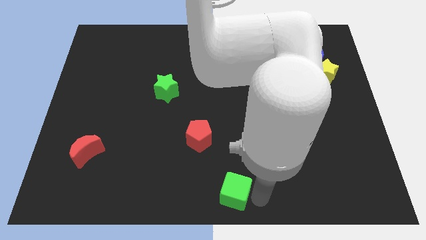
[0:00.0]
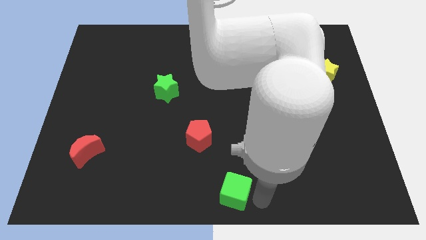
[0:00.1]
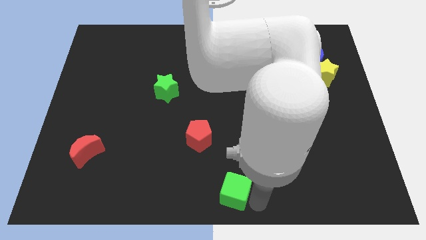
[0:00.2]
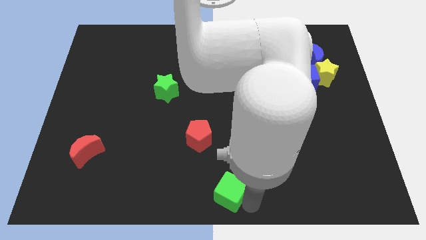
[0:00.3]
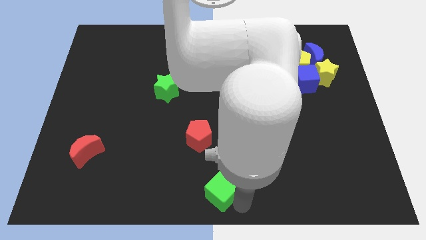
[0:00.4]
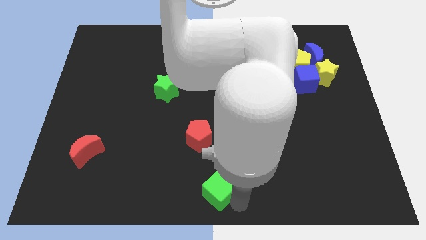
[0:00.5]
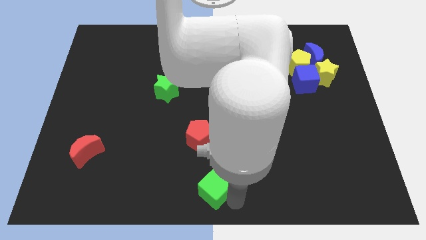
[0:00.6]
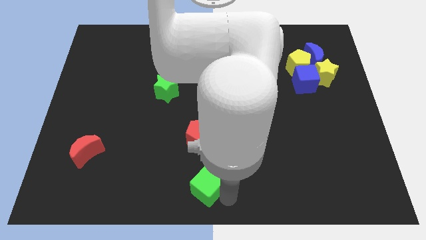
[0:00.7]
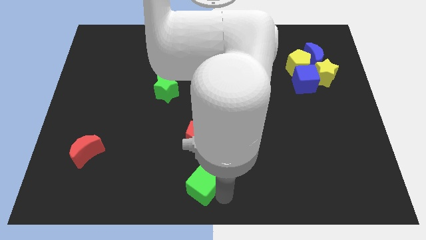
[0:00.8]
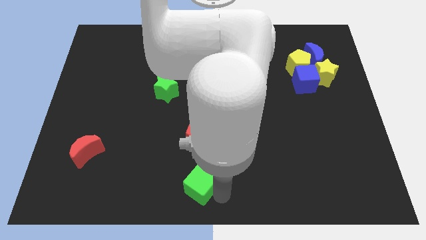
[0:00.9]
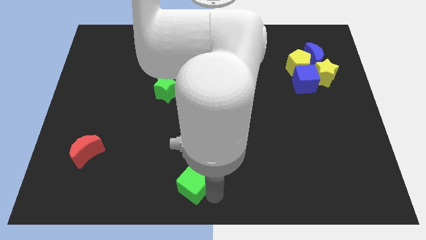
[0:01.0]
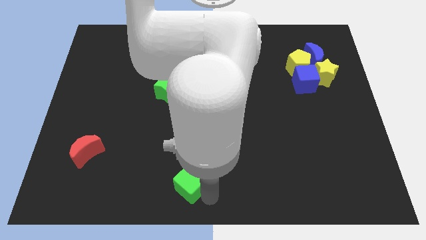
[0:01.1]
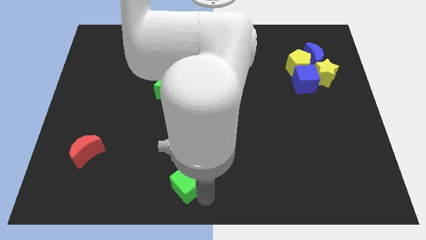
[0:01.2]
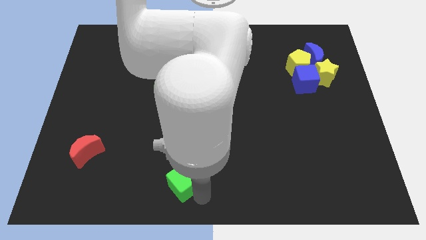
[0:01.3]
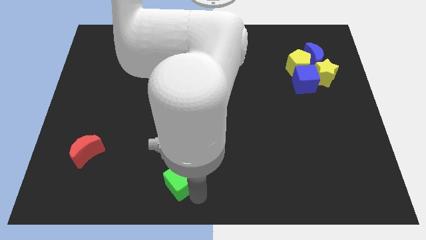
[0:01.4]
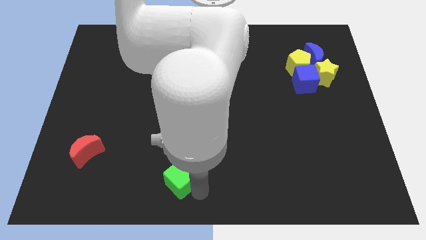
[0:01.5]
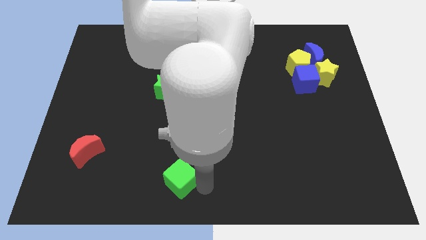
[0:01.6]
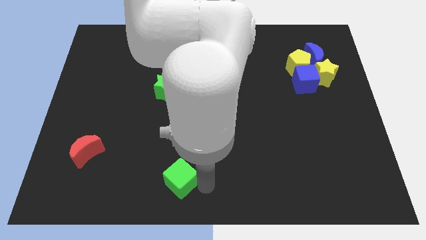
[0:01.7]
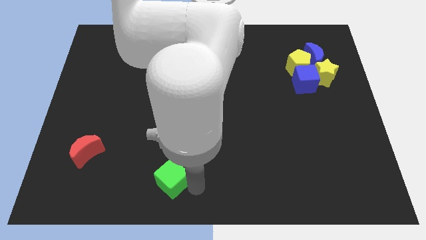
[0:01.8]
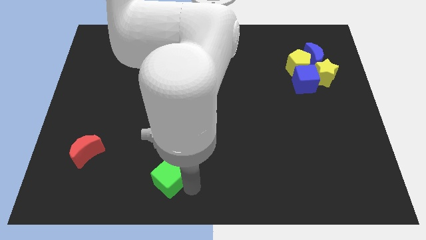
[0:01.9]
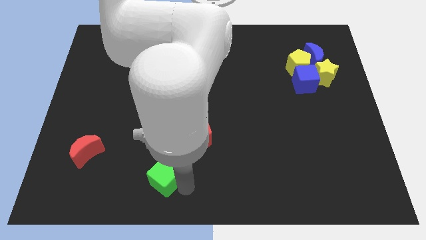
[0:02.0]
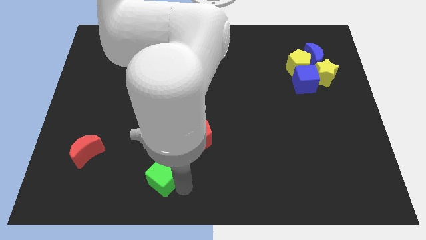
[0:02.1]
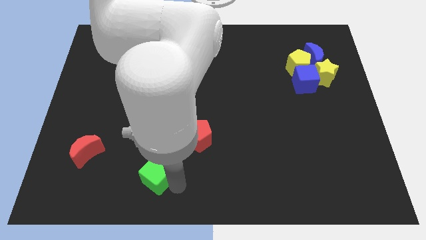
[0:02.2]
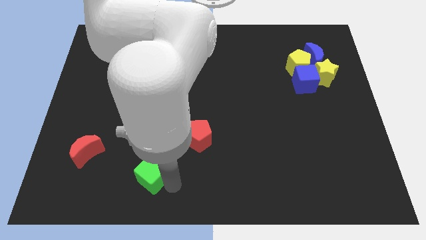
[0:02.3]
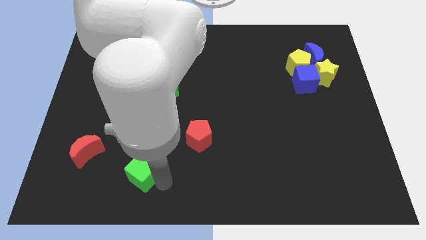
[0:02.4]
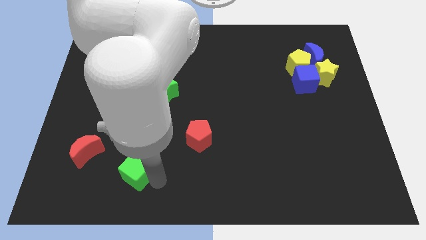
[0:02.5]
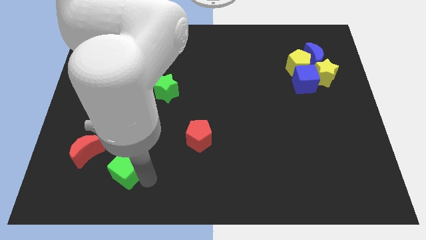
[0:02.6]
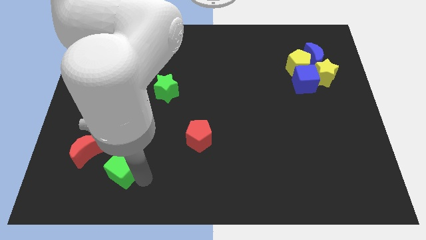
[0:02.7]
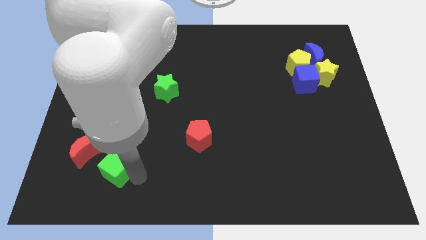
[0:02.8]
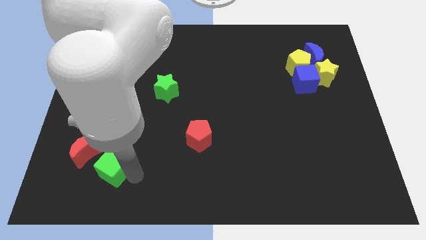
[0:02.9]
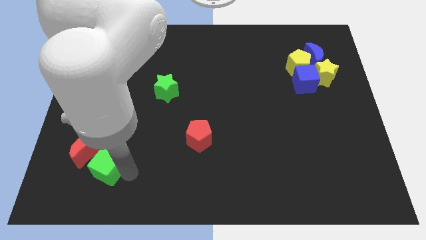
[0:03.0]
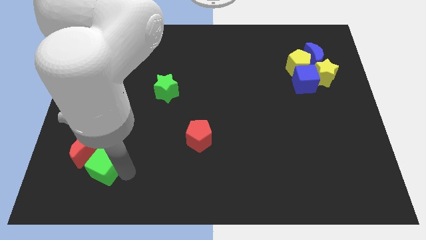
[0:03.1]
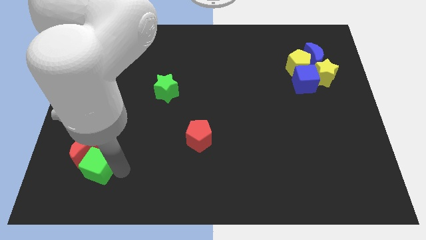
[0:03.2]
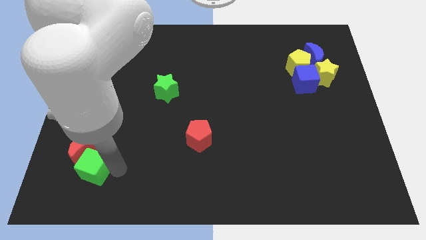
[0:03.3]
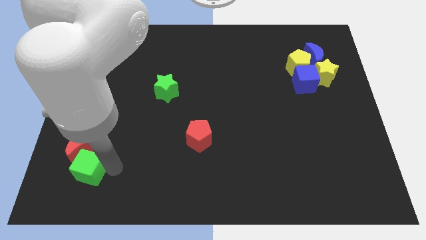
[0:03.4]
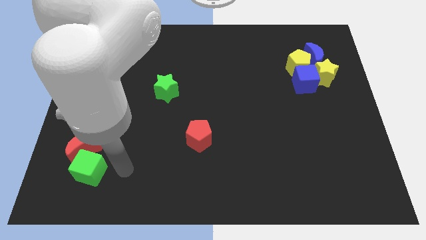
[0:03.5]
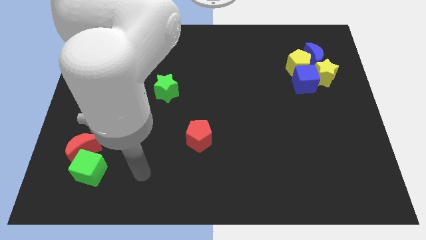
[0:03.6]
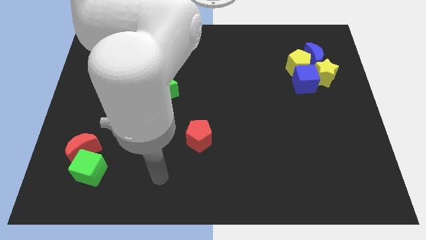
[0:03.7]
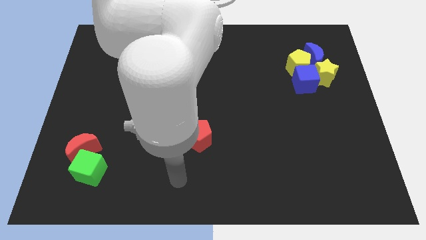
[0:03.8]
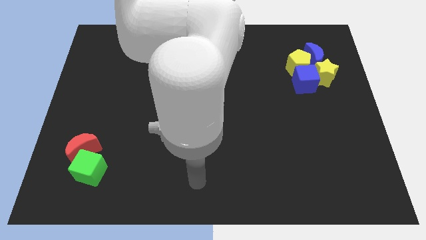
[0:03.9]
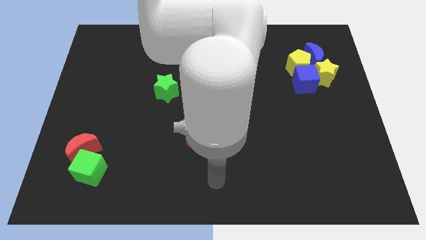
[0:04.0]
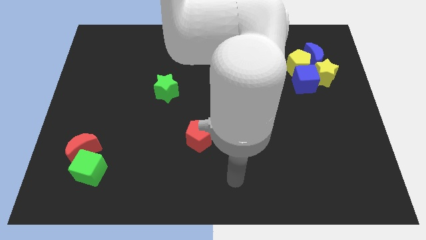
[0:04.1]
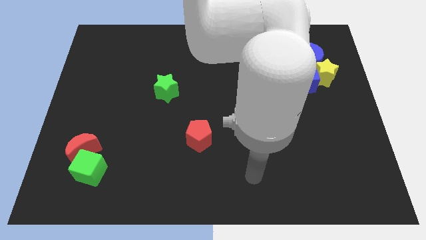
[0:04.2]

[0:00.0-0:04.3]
push the green cube into the red moon

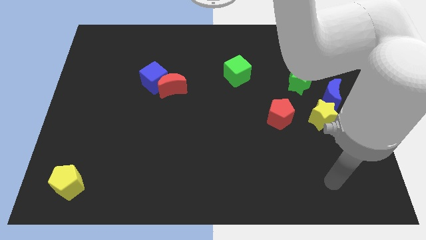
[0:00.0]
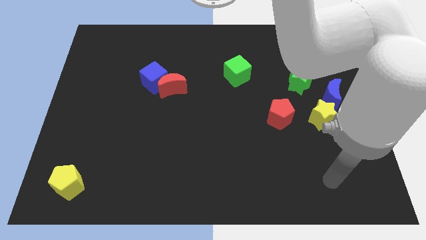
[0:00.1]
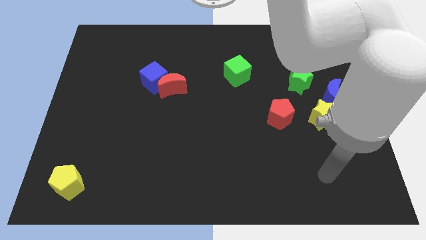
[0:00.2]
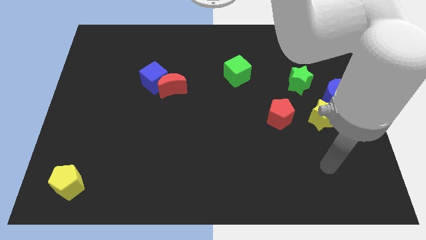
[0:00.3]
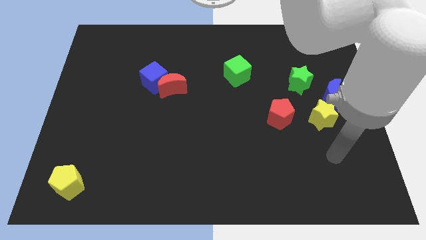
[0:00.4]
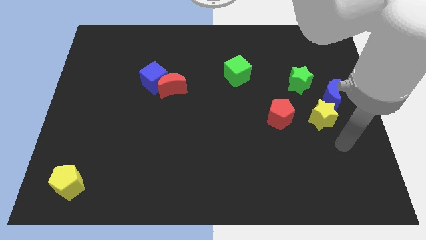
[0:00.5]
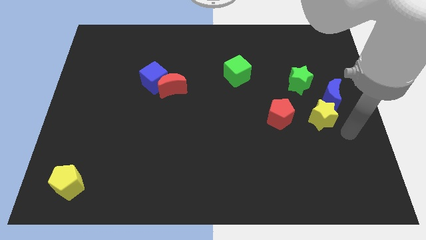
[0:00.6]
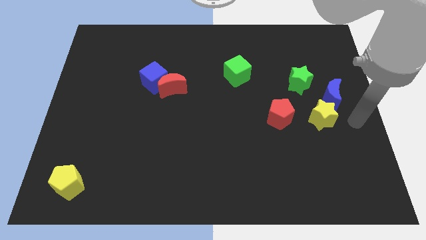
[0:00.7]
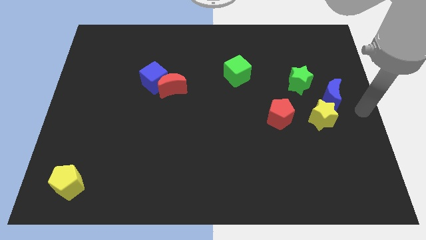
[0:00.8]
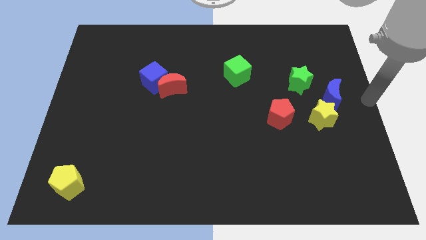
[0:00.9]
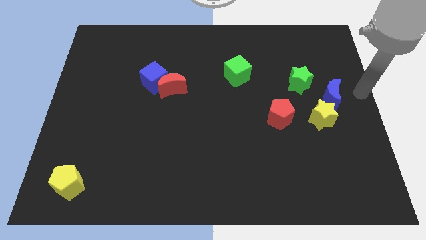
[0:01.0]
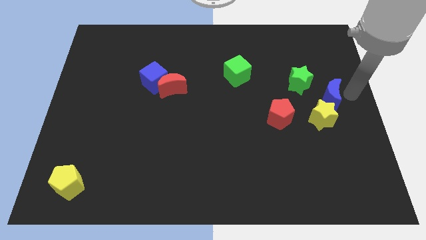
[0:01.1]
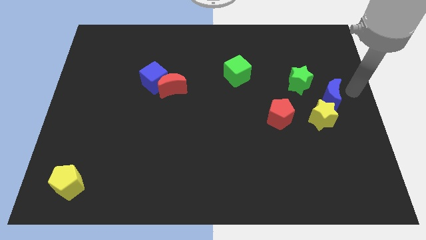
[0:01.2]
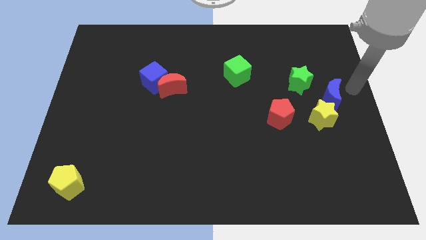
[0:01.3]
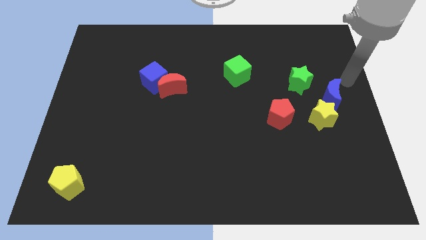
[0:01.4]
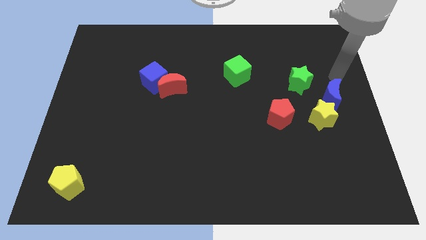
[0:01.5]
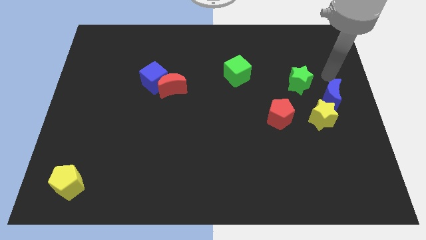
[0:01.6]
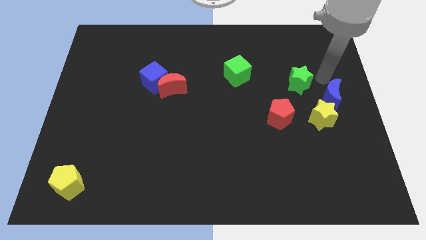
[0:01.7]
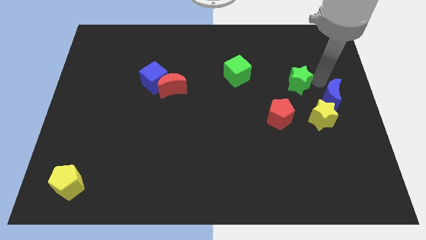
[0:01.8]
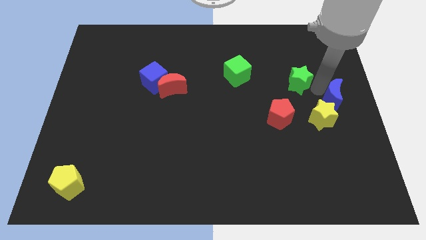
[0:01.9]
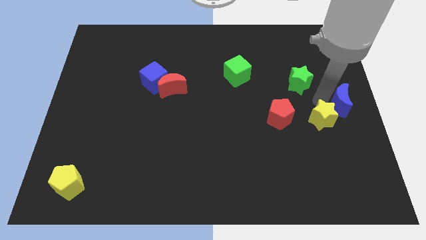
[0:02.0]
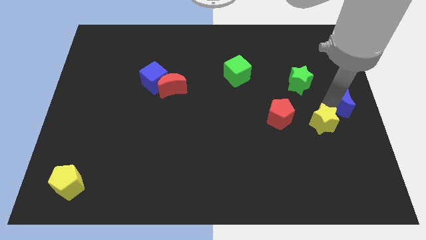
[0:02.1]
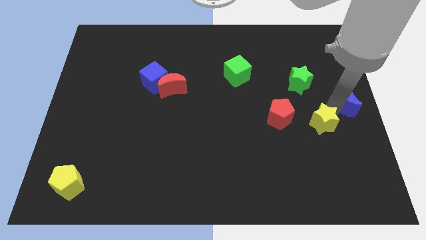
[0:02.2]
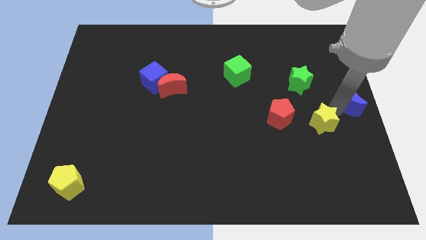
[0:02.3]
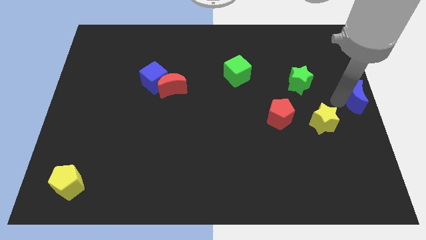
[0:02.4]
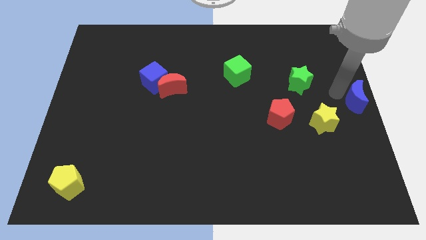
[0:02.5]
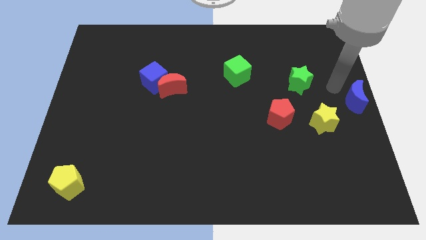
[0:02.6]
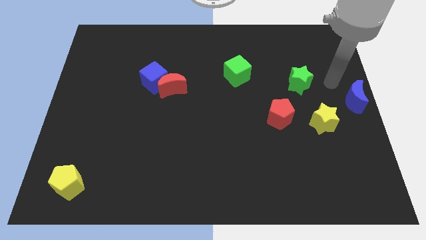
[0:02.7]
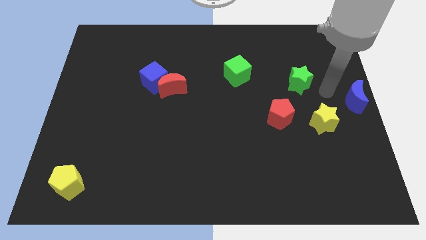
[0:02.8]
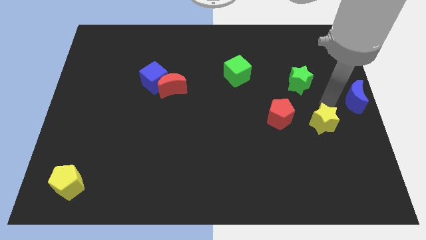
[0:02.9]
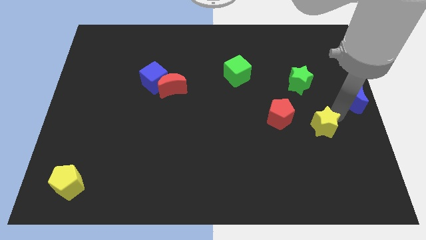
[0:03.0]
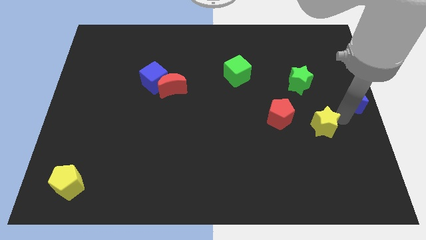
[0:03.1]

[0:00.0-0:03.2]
move blue moon to the right center of the board

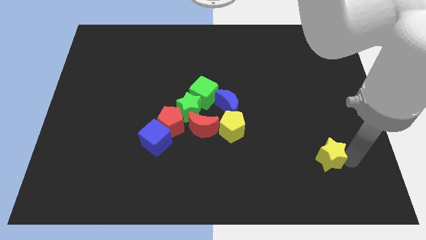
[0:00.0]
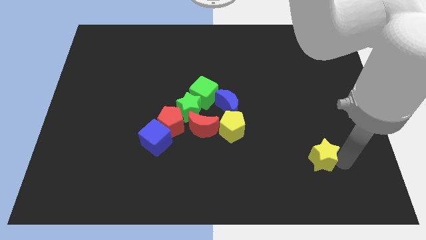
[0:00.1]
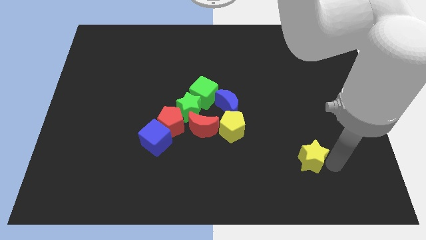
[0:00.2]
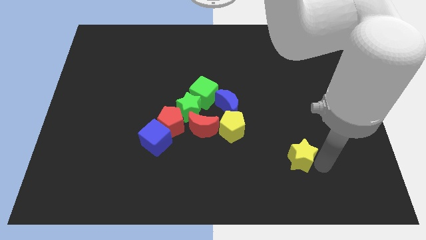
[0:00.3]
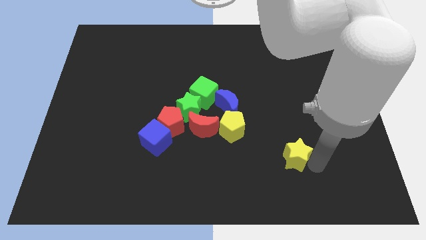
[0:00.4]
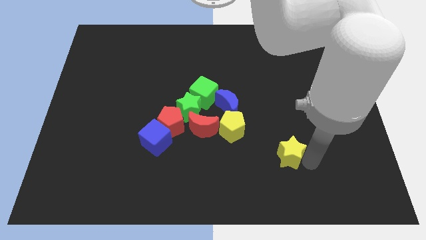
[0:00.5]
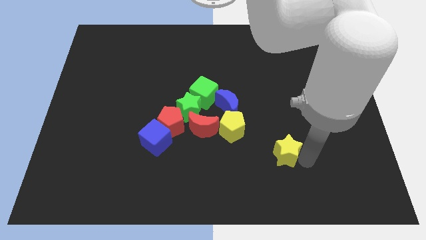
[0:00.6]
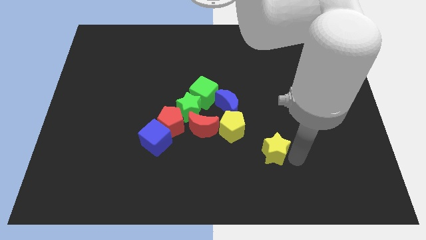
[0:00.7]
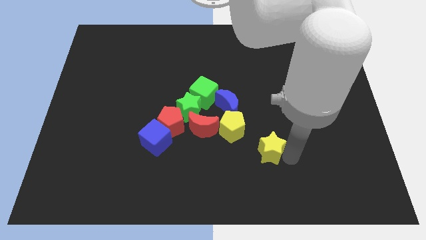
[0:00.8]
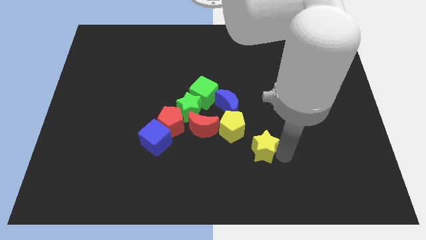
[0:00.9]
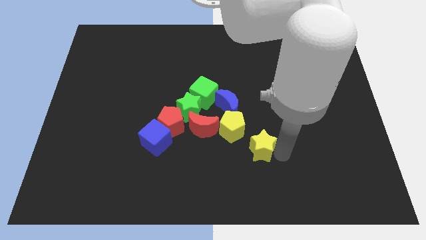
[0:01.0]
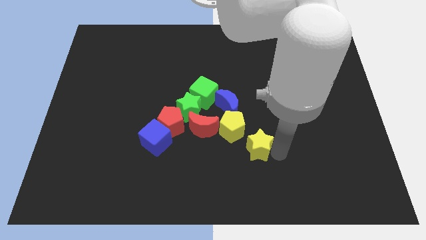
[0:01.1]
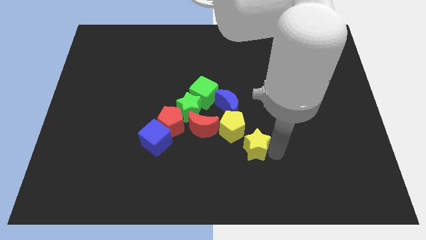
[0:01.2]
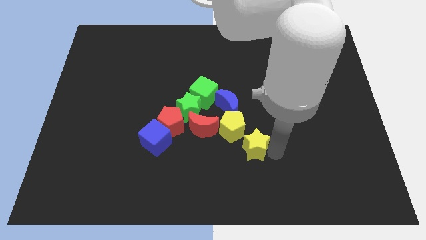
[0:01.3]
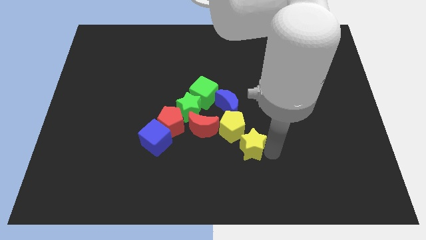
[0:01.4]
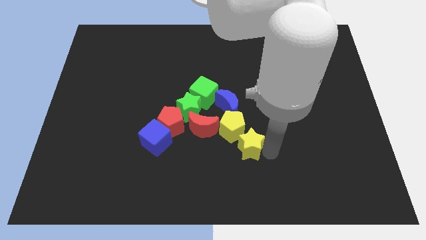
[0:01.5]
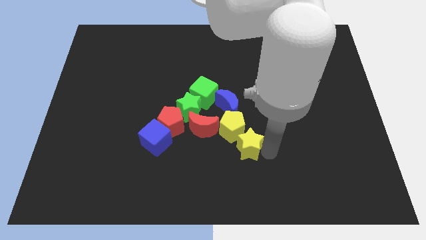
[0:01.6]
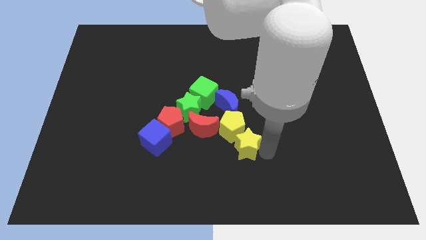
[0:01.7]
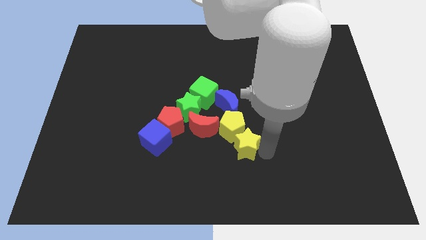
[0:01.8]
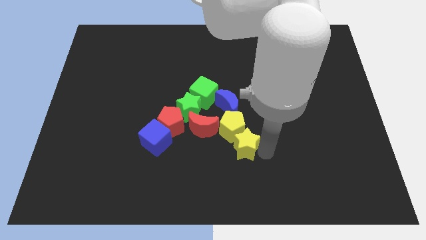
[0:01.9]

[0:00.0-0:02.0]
place the yellow star bottom right to yellow pentagon
